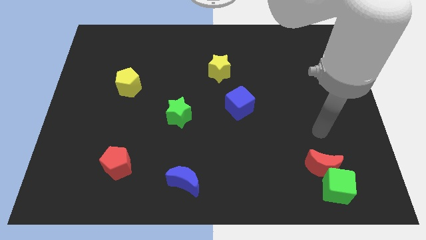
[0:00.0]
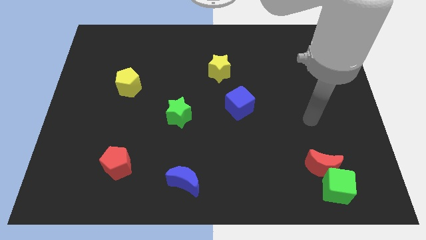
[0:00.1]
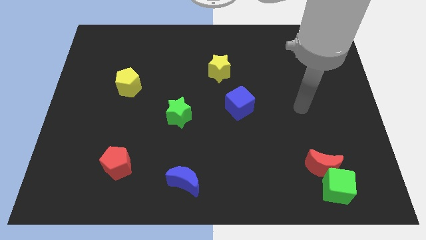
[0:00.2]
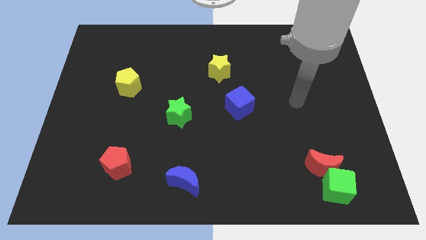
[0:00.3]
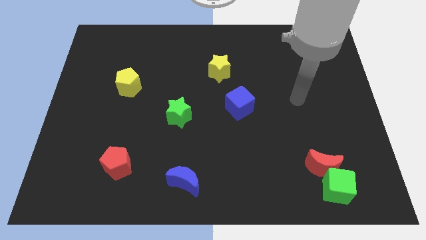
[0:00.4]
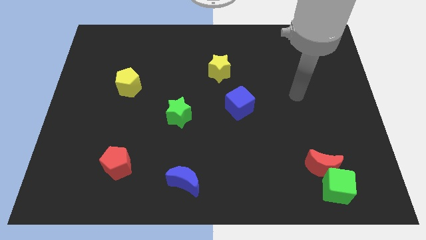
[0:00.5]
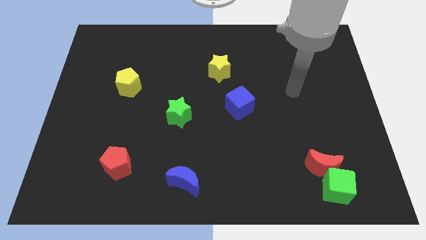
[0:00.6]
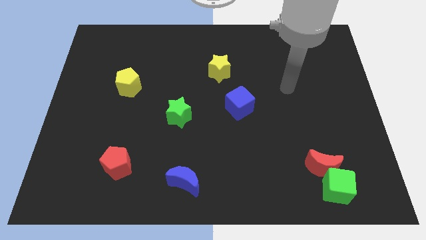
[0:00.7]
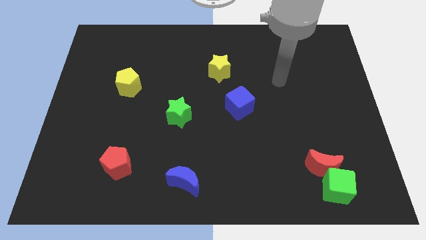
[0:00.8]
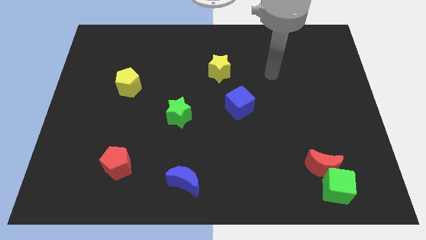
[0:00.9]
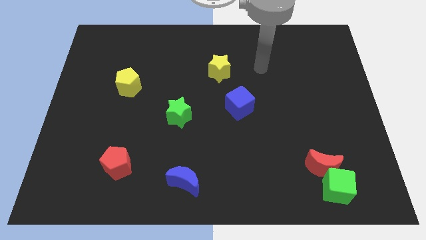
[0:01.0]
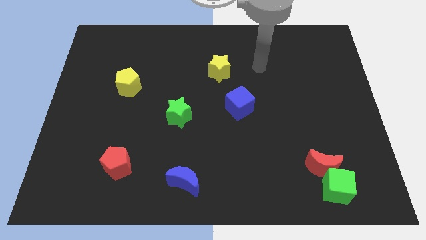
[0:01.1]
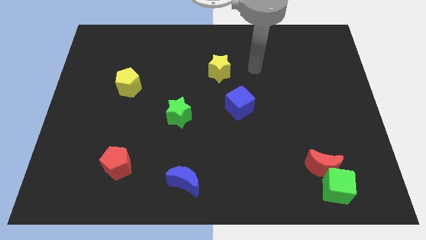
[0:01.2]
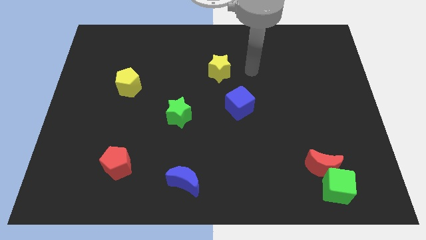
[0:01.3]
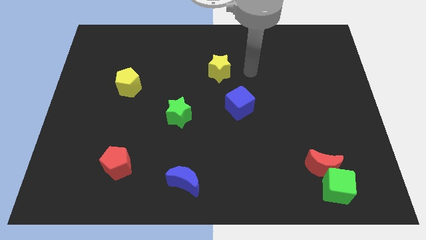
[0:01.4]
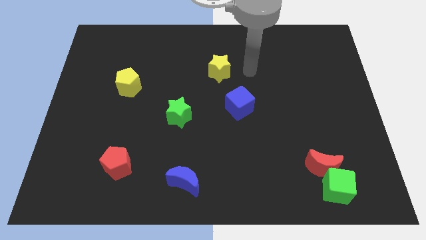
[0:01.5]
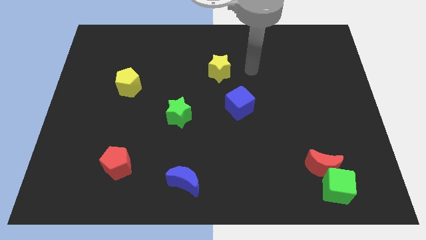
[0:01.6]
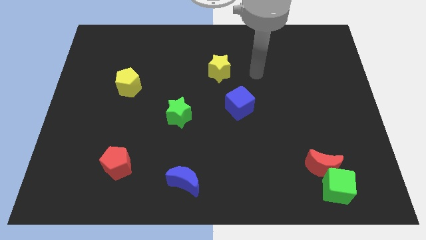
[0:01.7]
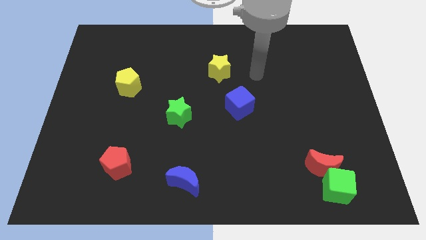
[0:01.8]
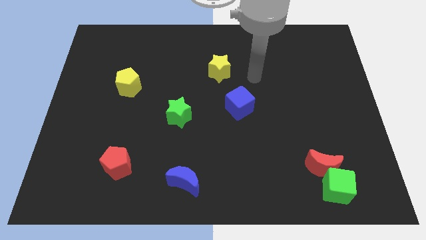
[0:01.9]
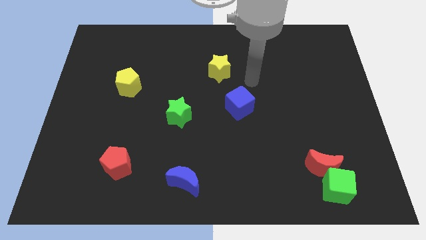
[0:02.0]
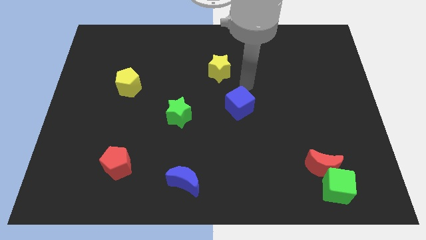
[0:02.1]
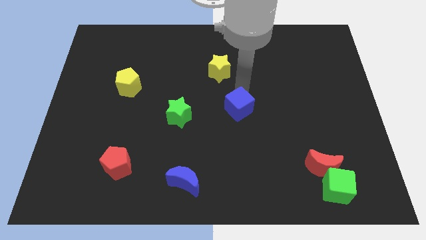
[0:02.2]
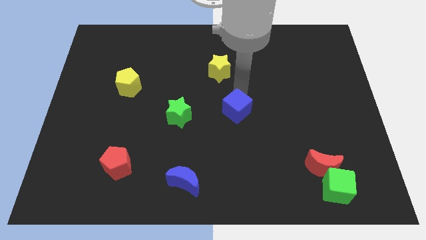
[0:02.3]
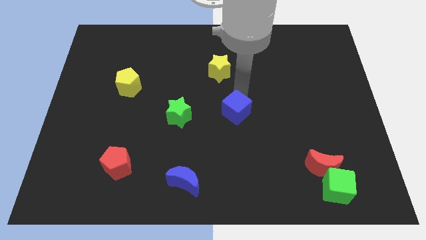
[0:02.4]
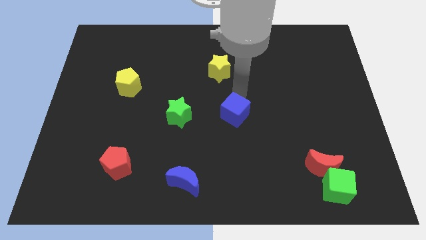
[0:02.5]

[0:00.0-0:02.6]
tap the blue cube

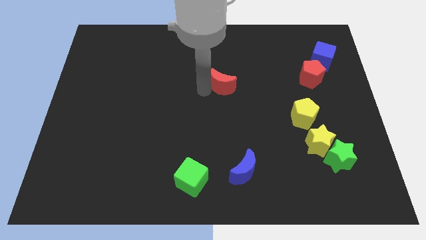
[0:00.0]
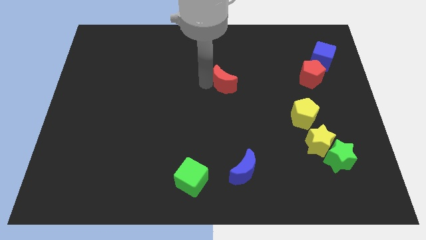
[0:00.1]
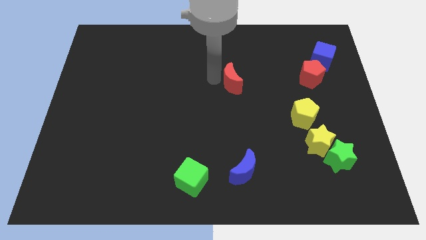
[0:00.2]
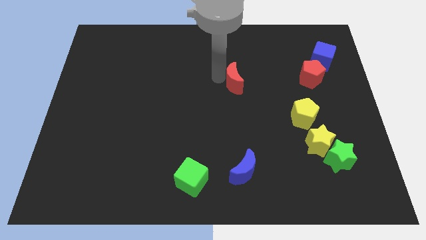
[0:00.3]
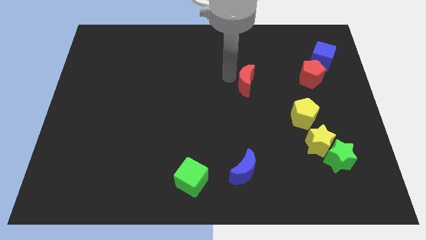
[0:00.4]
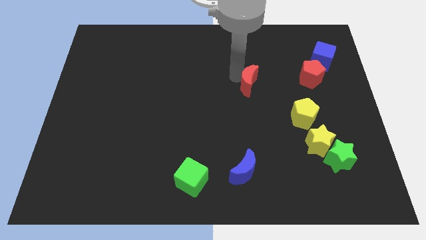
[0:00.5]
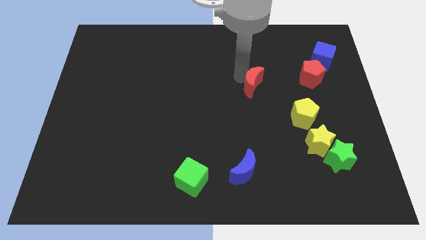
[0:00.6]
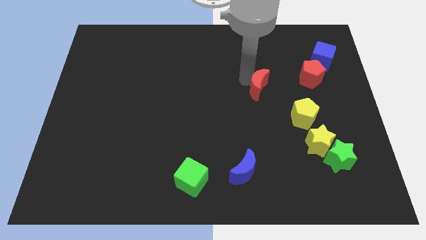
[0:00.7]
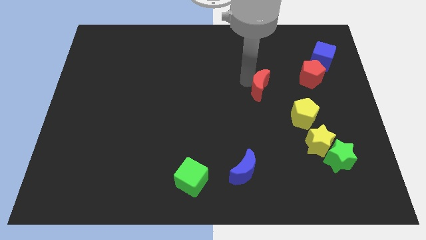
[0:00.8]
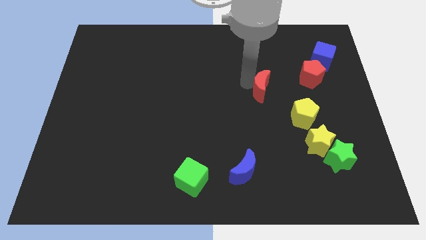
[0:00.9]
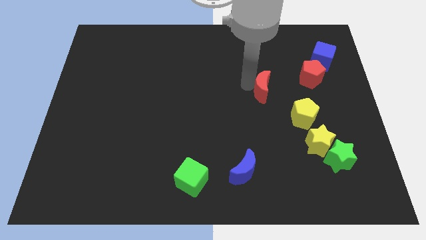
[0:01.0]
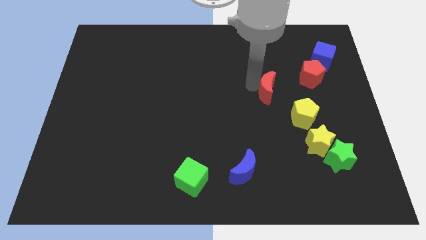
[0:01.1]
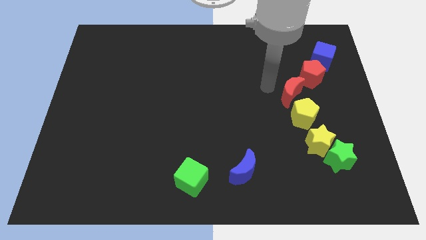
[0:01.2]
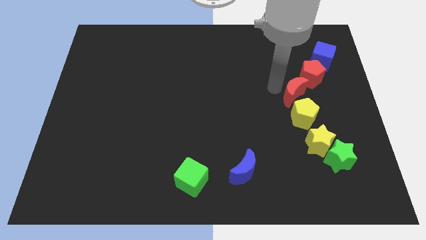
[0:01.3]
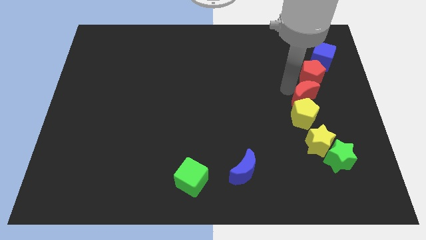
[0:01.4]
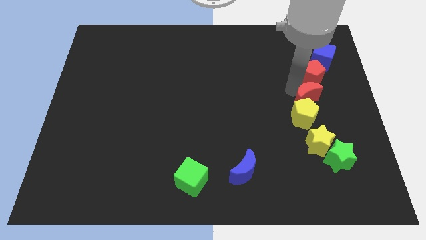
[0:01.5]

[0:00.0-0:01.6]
move the red moon down to the red pentagon

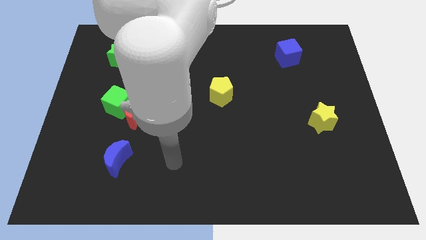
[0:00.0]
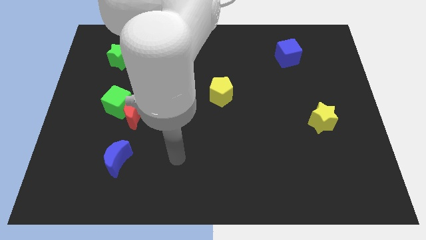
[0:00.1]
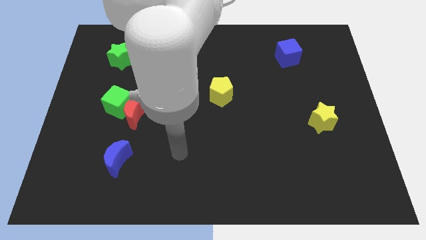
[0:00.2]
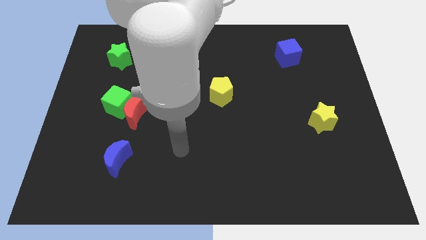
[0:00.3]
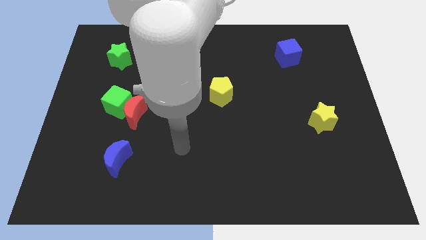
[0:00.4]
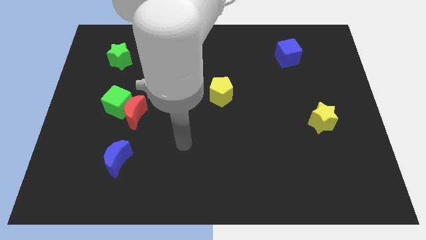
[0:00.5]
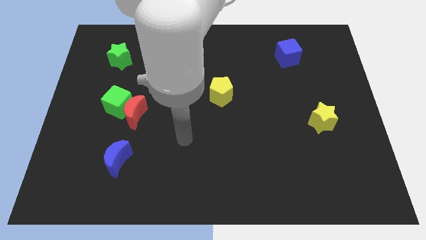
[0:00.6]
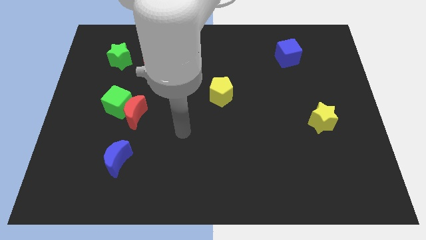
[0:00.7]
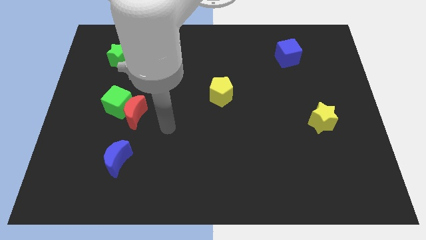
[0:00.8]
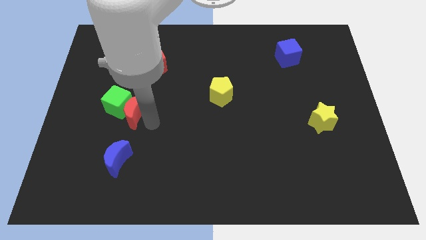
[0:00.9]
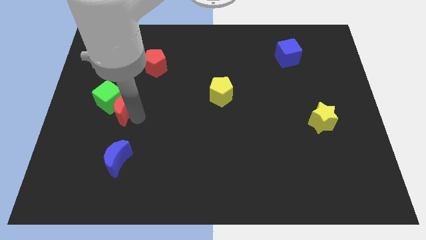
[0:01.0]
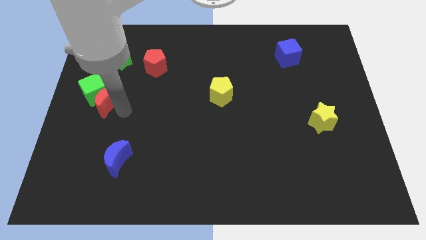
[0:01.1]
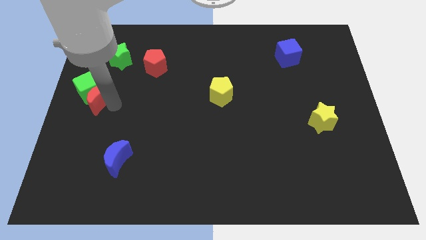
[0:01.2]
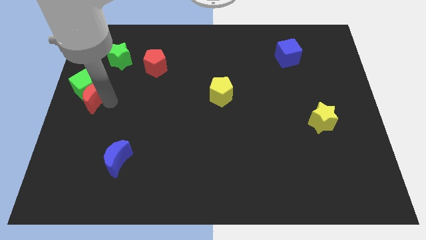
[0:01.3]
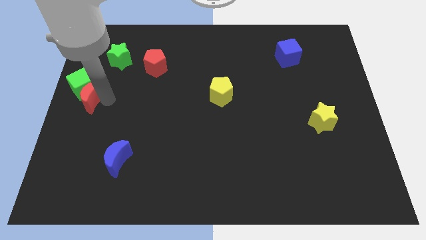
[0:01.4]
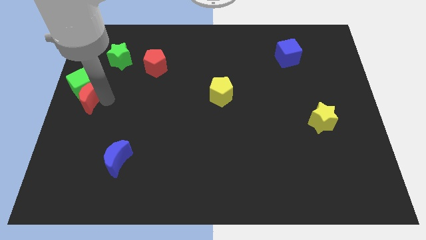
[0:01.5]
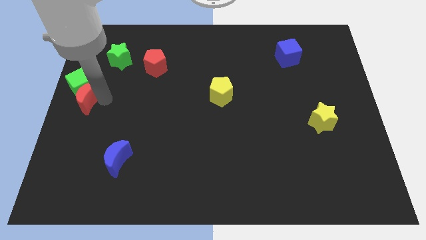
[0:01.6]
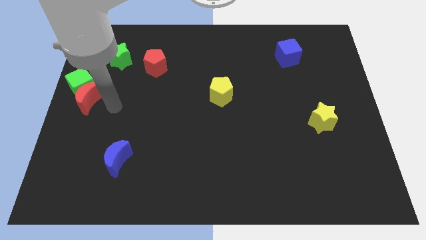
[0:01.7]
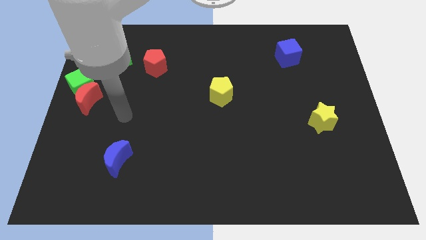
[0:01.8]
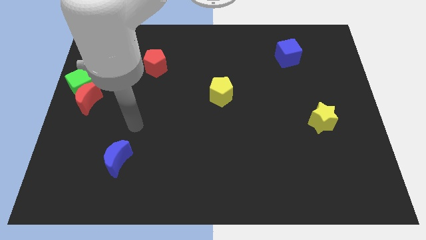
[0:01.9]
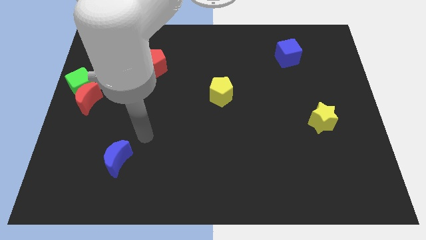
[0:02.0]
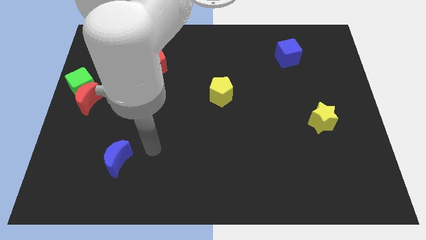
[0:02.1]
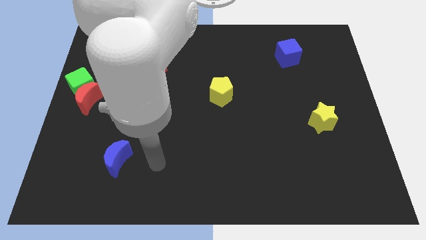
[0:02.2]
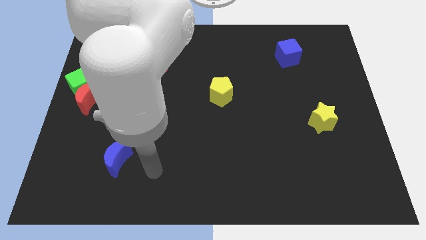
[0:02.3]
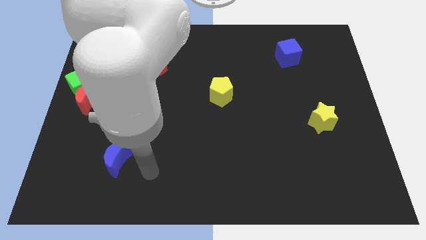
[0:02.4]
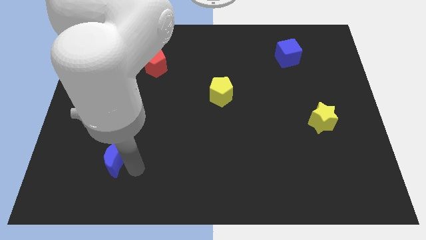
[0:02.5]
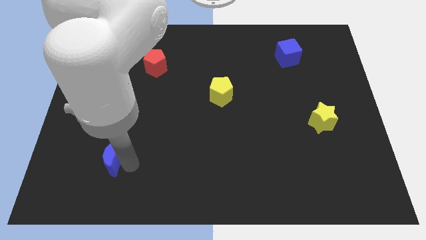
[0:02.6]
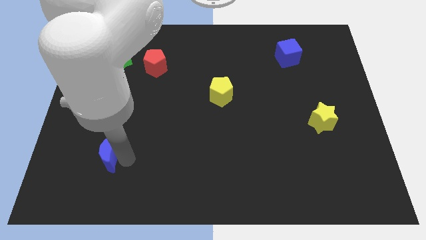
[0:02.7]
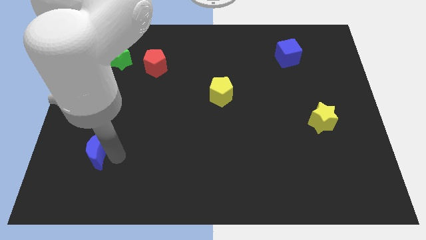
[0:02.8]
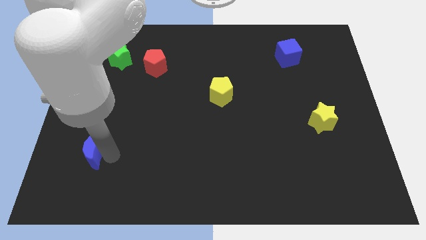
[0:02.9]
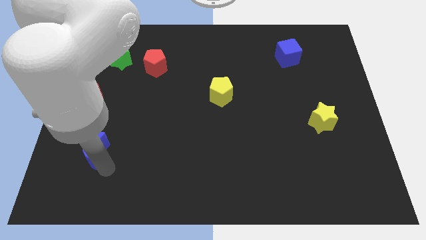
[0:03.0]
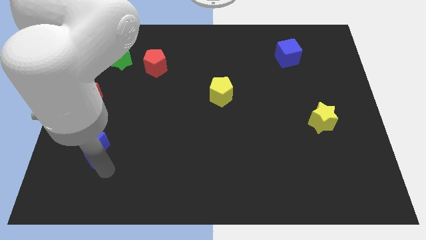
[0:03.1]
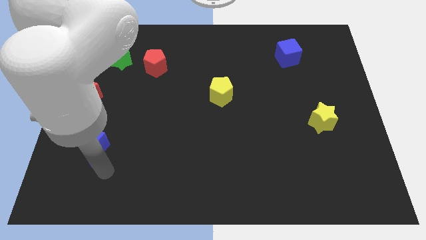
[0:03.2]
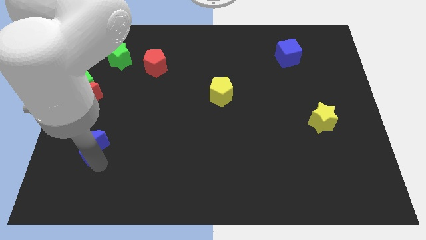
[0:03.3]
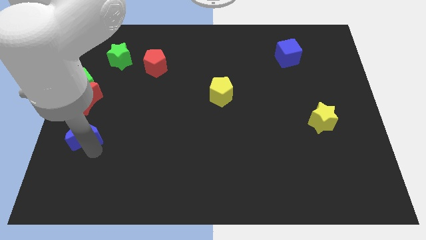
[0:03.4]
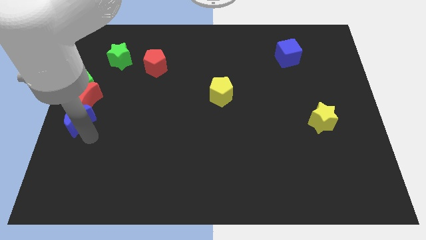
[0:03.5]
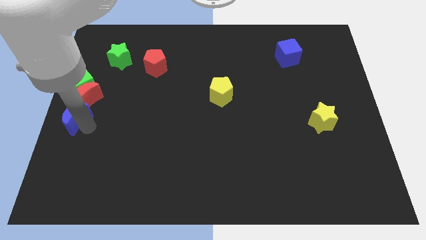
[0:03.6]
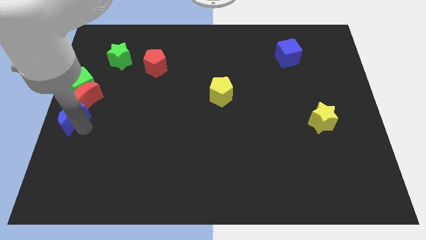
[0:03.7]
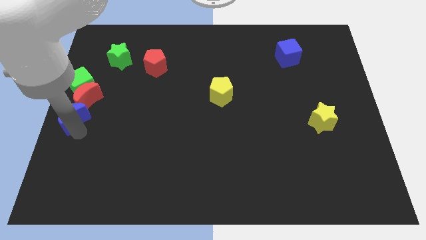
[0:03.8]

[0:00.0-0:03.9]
group up the green cube red crescent and blue moon at the center left of the board

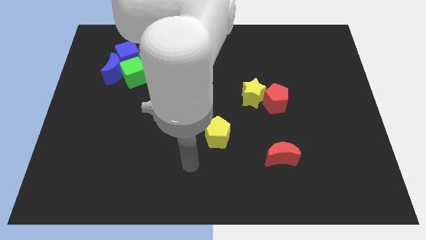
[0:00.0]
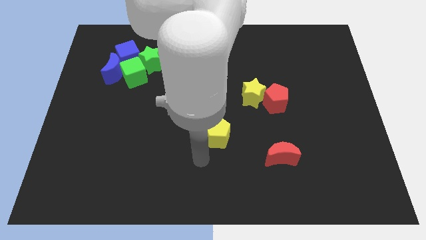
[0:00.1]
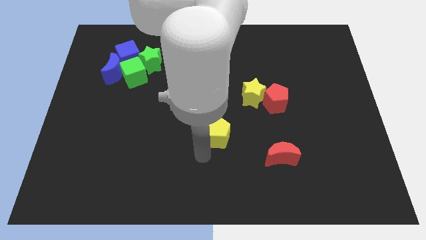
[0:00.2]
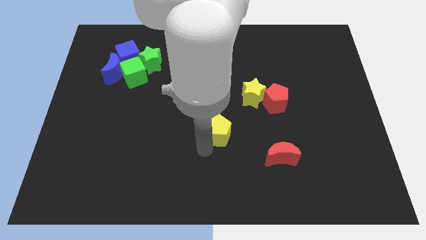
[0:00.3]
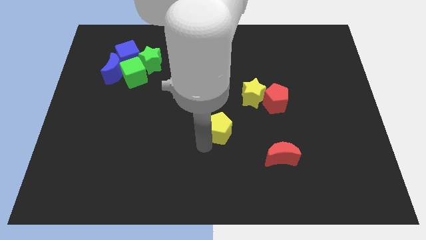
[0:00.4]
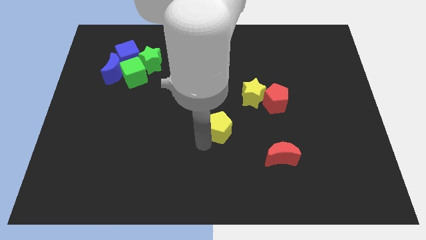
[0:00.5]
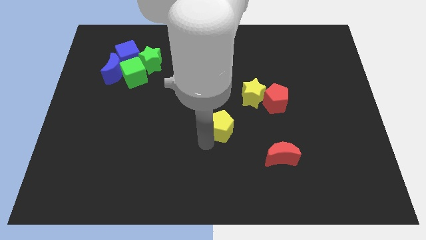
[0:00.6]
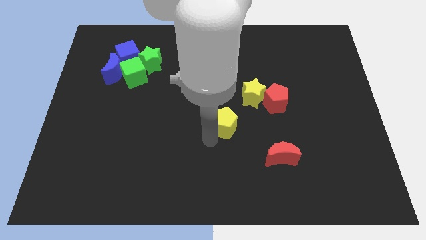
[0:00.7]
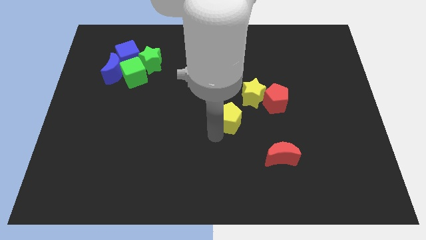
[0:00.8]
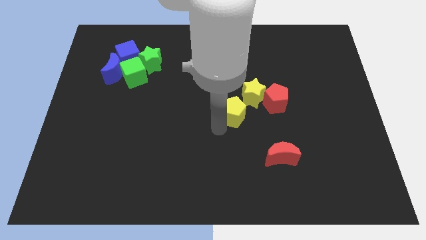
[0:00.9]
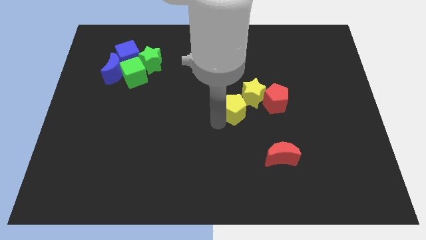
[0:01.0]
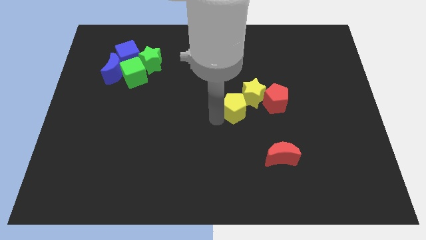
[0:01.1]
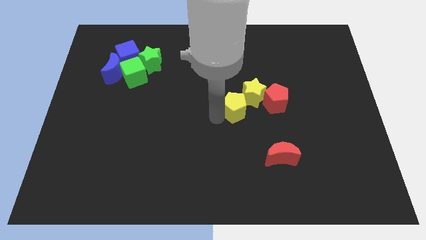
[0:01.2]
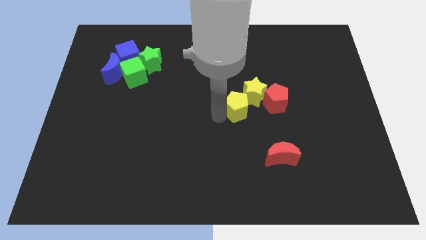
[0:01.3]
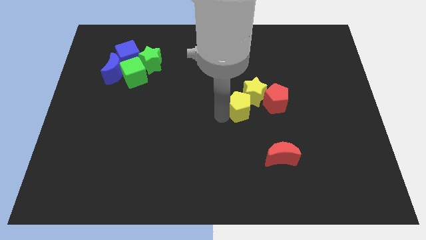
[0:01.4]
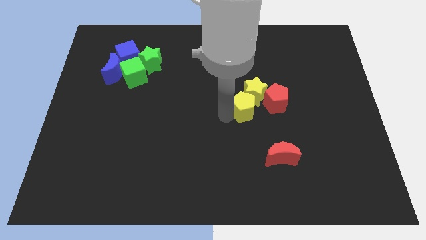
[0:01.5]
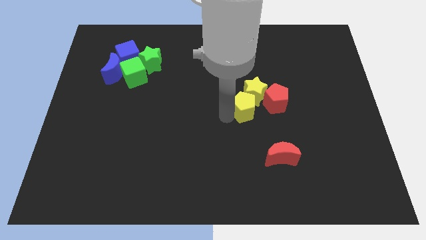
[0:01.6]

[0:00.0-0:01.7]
place the yellow pentagon diagonally bottom left of the yellow star
